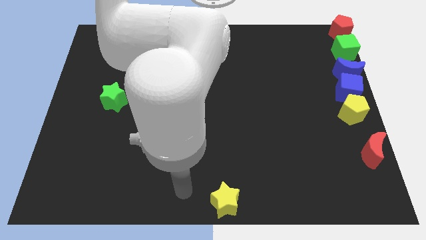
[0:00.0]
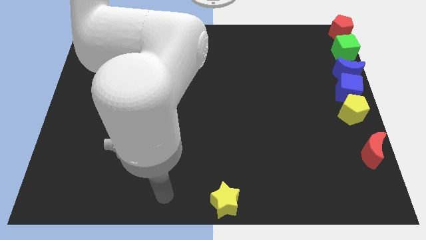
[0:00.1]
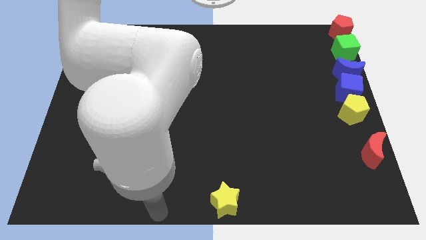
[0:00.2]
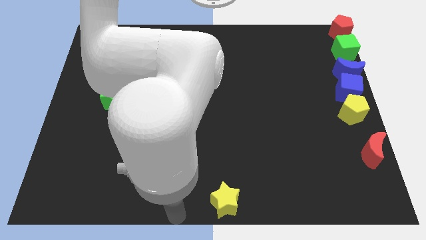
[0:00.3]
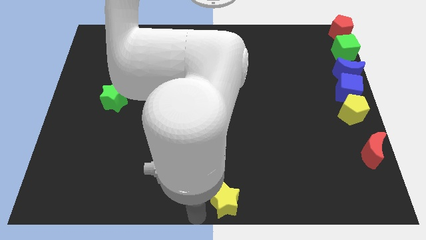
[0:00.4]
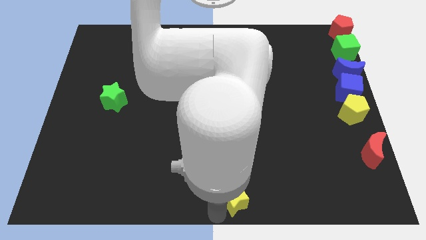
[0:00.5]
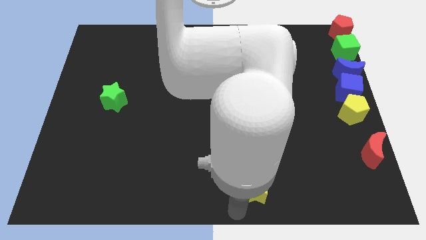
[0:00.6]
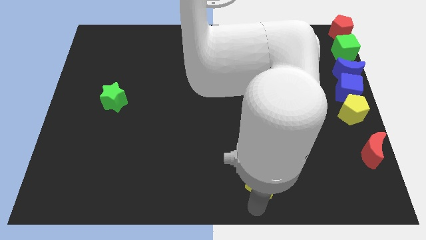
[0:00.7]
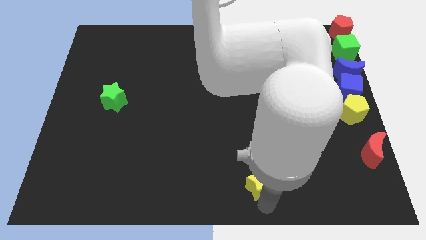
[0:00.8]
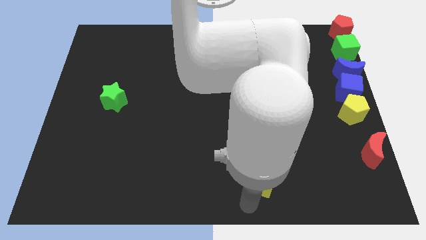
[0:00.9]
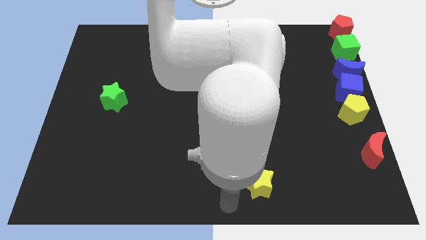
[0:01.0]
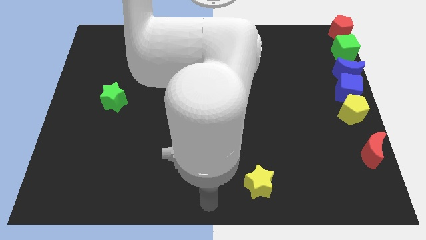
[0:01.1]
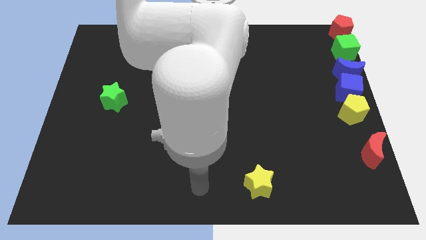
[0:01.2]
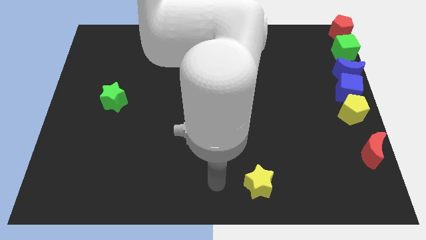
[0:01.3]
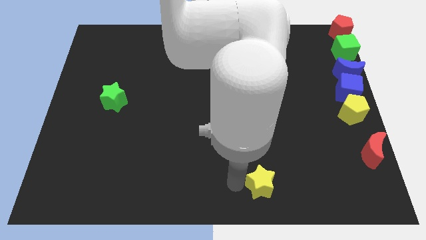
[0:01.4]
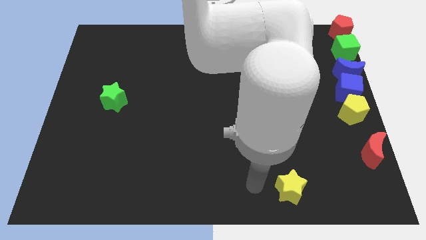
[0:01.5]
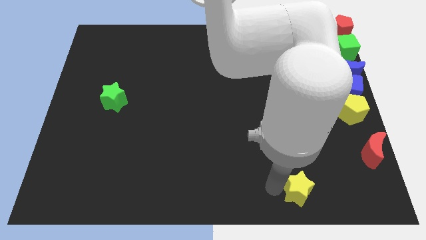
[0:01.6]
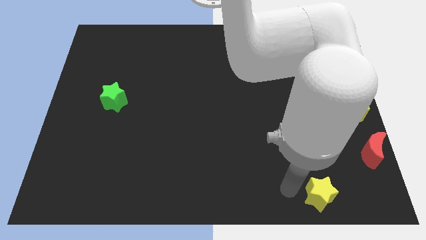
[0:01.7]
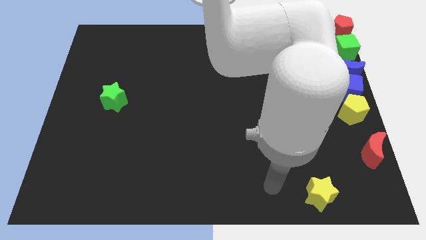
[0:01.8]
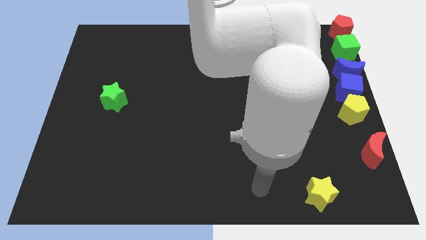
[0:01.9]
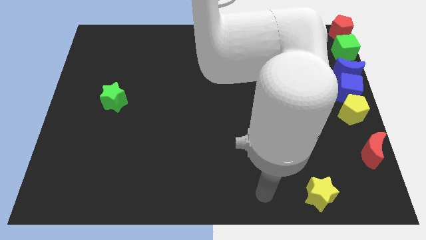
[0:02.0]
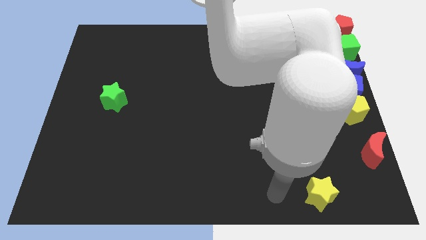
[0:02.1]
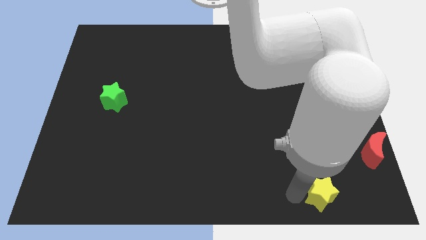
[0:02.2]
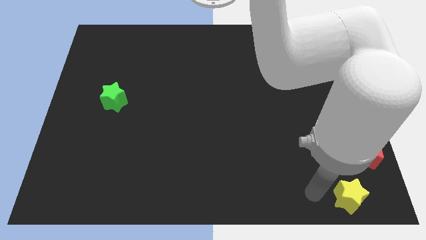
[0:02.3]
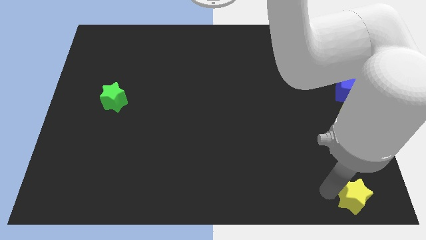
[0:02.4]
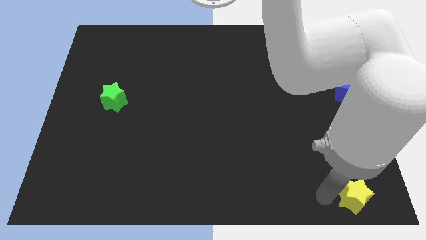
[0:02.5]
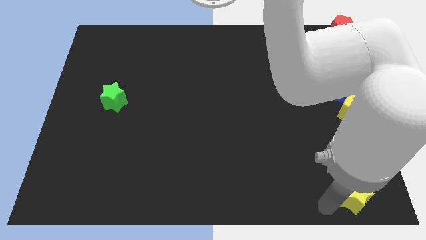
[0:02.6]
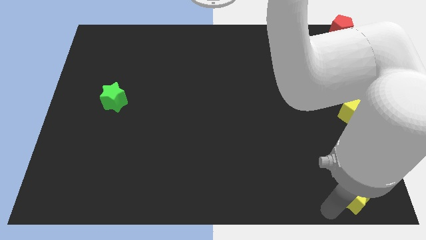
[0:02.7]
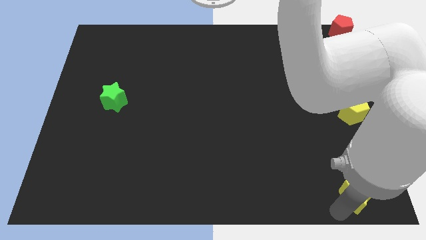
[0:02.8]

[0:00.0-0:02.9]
move the yellow star to the bottom right of the board

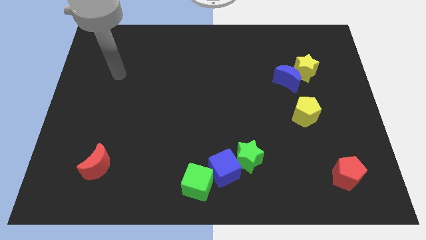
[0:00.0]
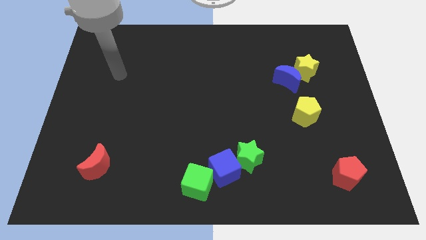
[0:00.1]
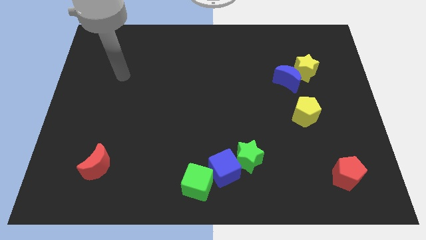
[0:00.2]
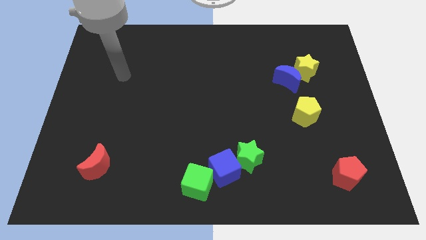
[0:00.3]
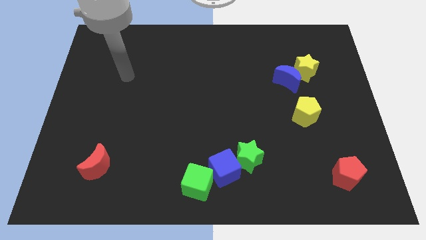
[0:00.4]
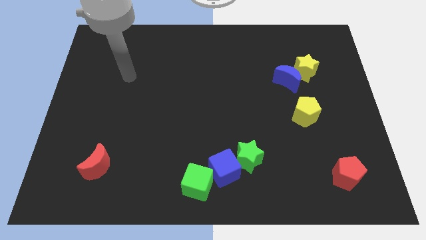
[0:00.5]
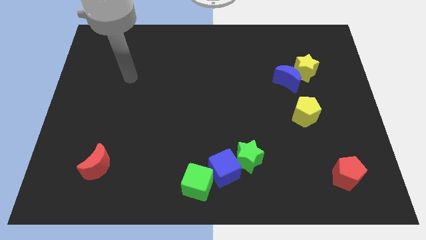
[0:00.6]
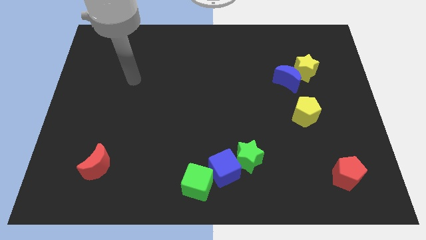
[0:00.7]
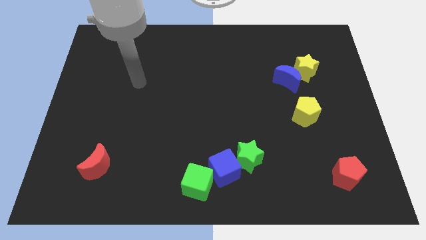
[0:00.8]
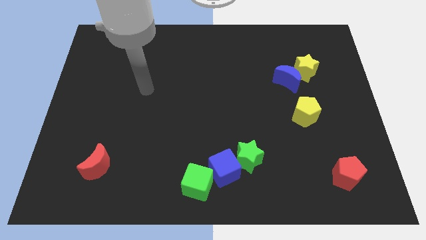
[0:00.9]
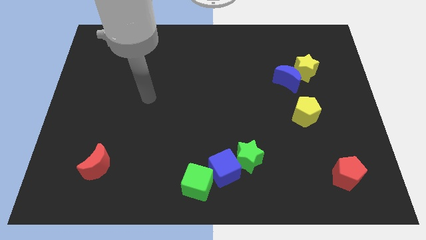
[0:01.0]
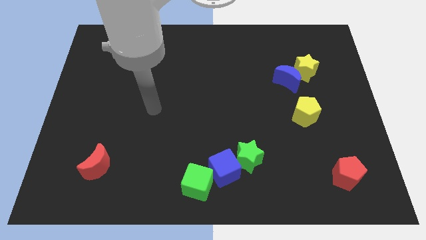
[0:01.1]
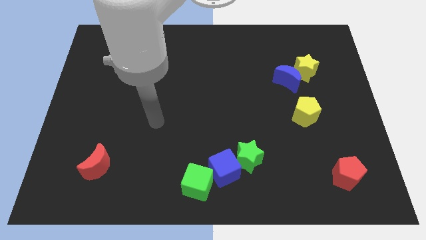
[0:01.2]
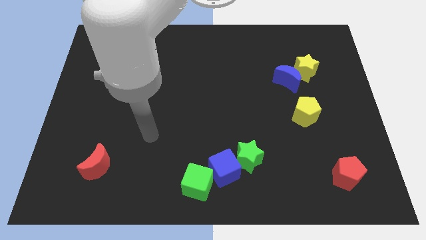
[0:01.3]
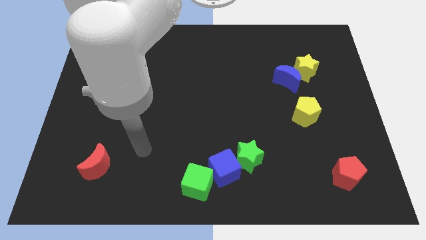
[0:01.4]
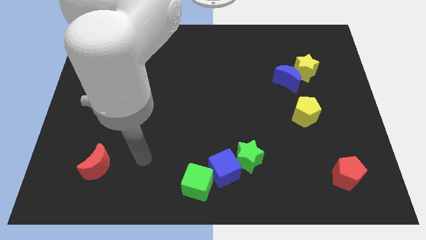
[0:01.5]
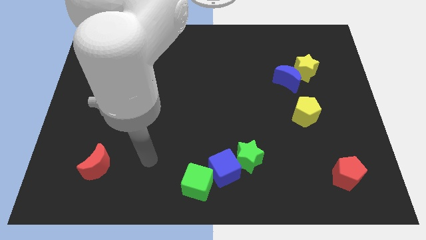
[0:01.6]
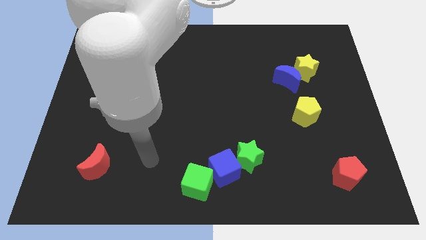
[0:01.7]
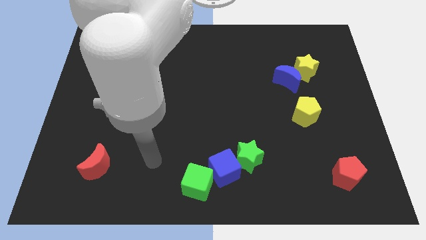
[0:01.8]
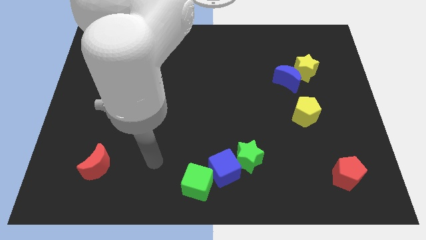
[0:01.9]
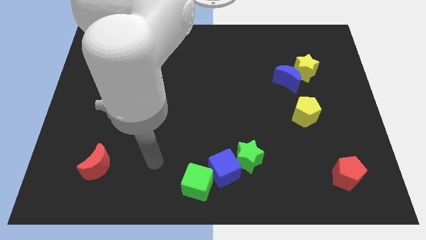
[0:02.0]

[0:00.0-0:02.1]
move your elbow towards the green cube

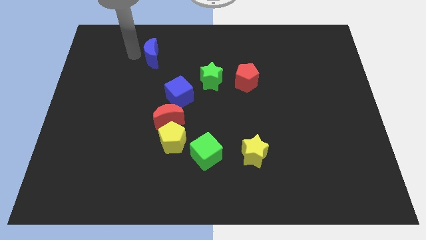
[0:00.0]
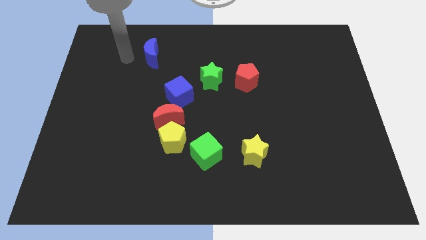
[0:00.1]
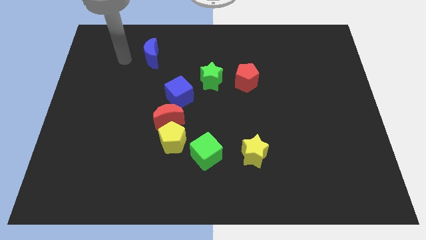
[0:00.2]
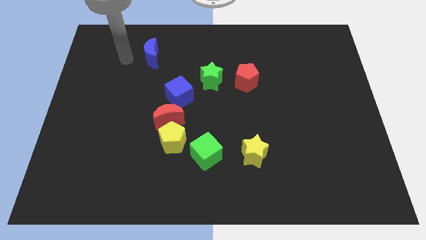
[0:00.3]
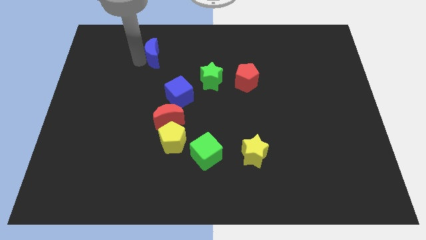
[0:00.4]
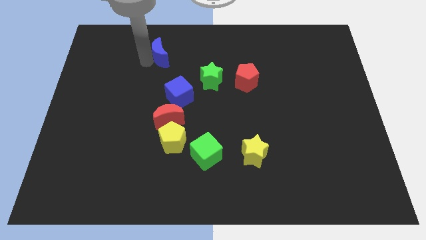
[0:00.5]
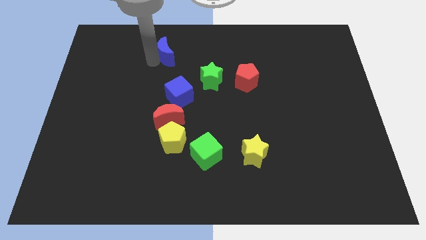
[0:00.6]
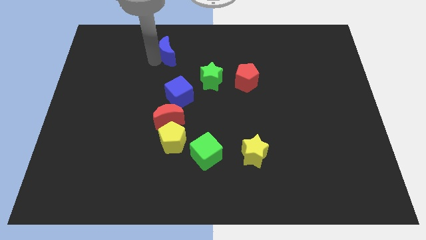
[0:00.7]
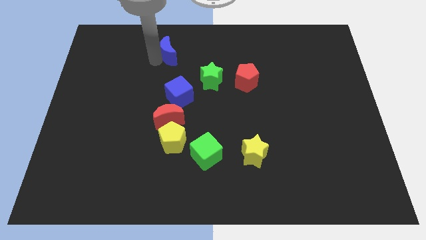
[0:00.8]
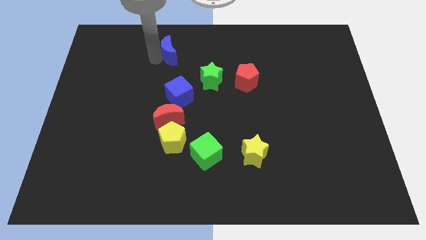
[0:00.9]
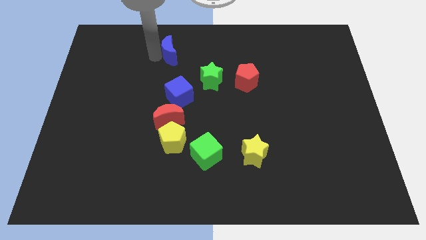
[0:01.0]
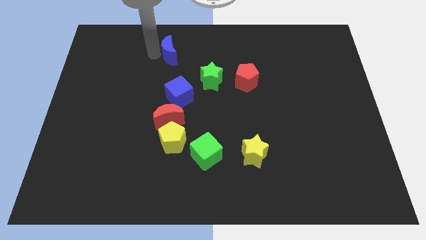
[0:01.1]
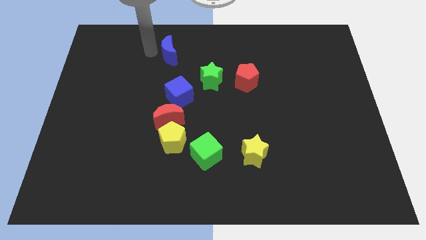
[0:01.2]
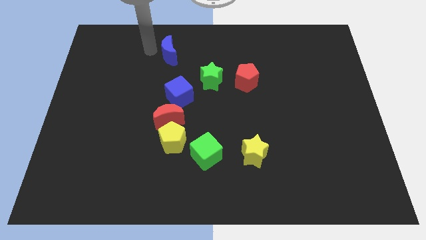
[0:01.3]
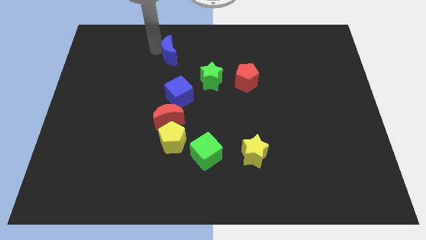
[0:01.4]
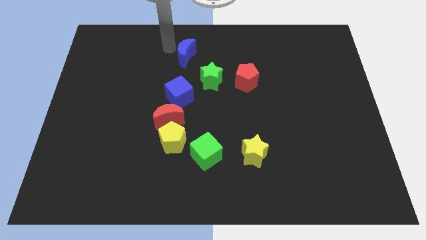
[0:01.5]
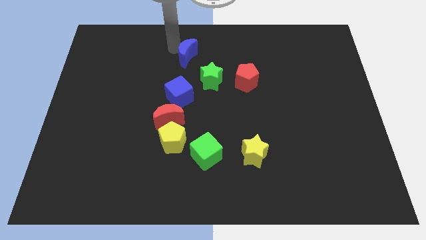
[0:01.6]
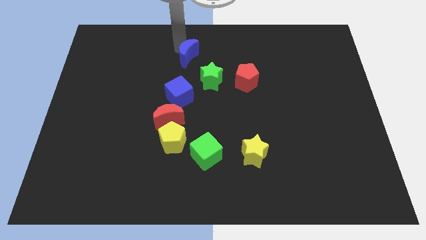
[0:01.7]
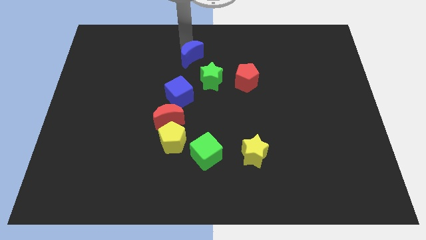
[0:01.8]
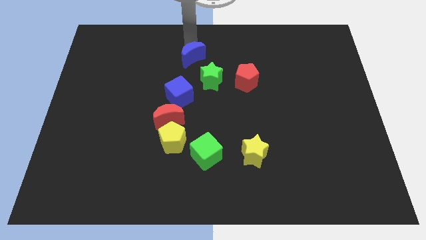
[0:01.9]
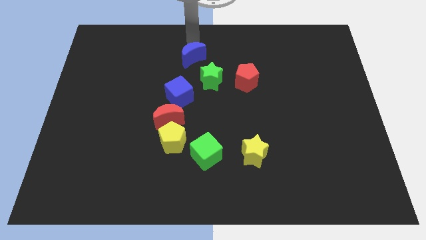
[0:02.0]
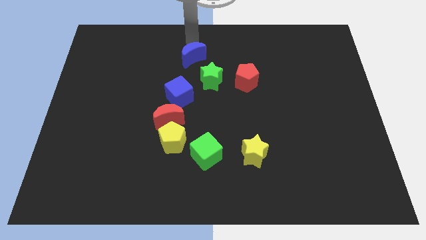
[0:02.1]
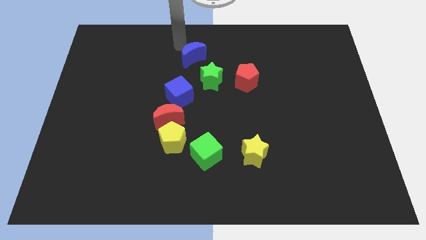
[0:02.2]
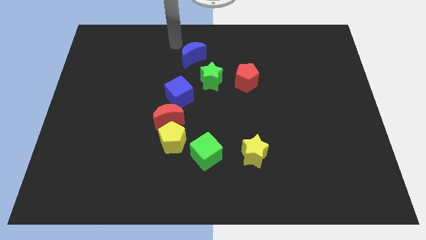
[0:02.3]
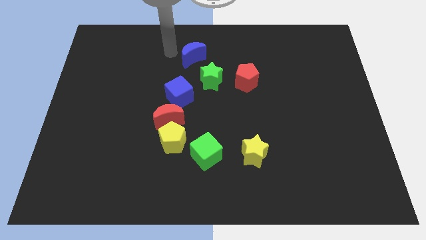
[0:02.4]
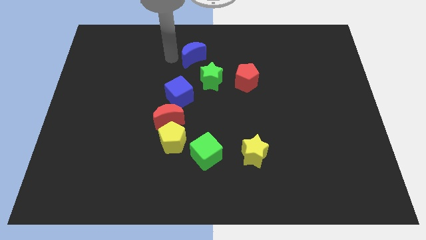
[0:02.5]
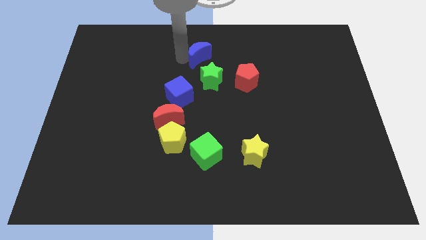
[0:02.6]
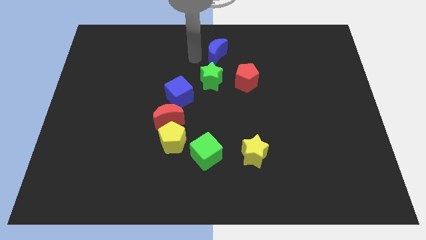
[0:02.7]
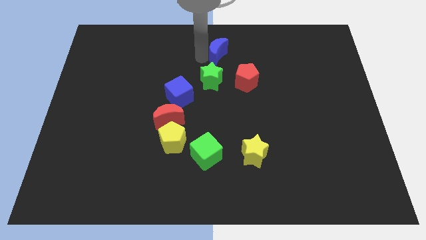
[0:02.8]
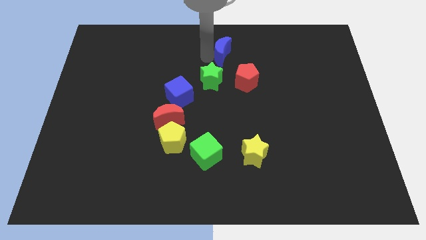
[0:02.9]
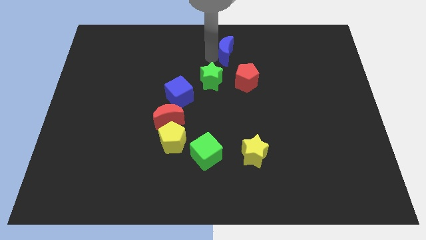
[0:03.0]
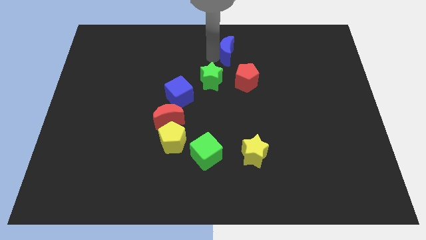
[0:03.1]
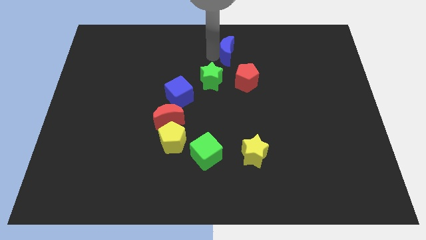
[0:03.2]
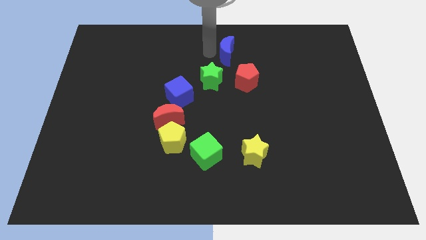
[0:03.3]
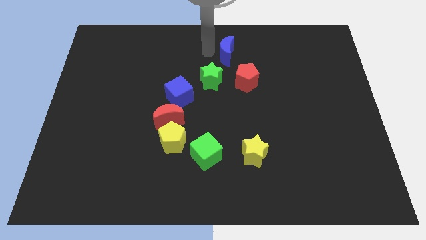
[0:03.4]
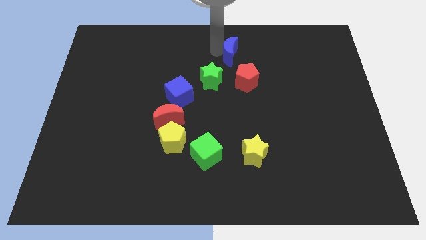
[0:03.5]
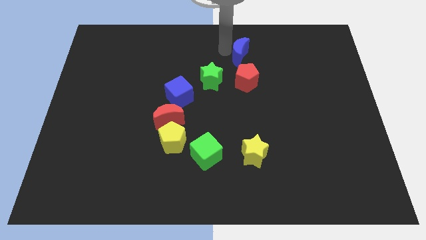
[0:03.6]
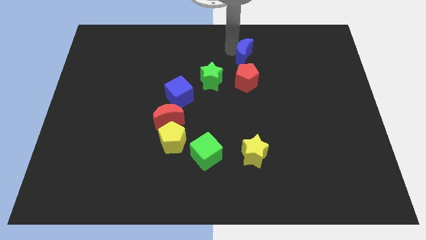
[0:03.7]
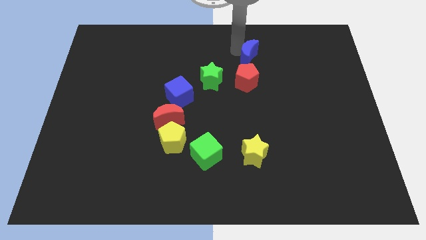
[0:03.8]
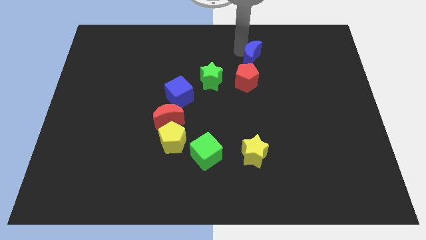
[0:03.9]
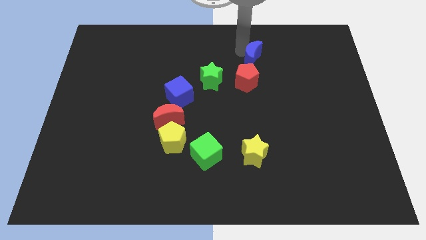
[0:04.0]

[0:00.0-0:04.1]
move the blue crescent close to the top side of the red pentagon
